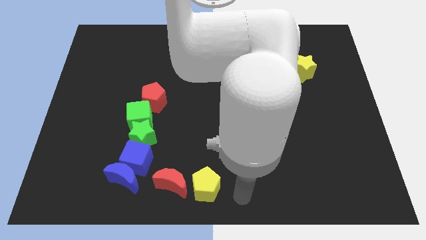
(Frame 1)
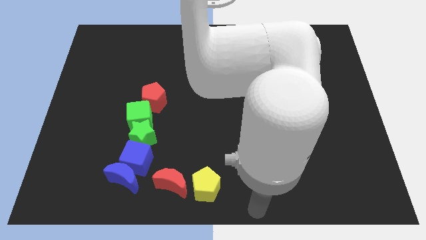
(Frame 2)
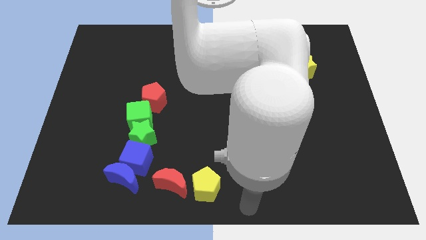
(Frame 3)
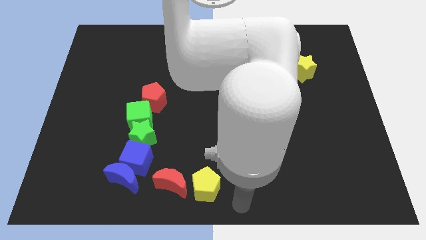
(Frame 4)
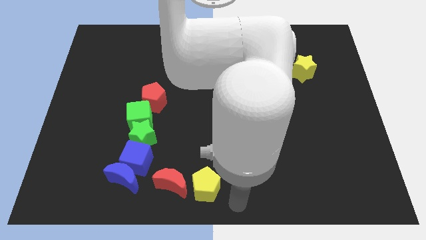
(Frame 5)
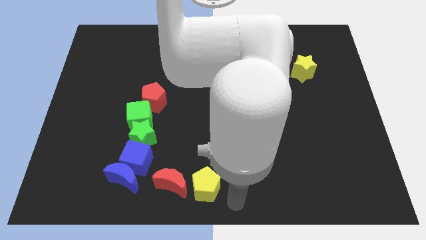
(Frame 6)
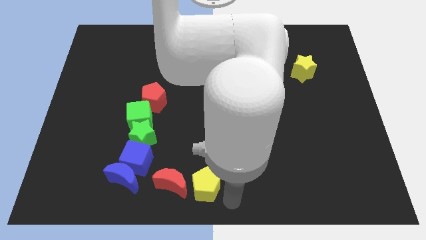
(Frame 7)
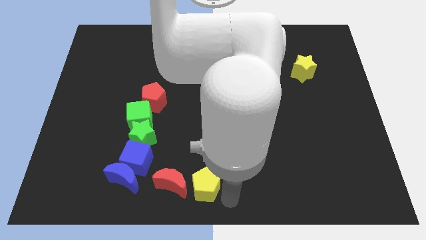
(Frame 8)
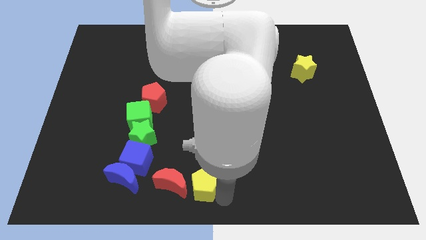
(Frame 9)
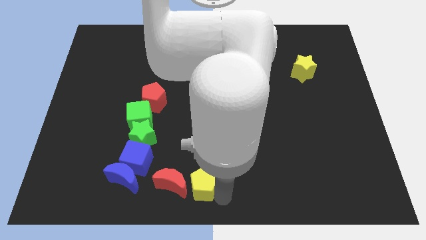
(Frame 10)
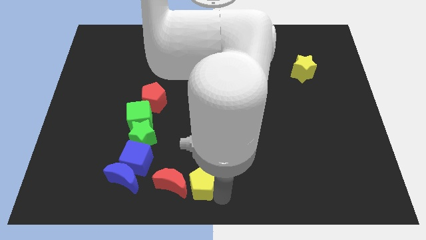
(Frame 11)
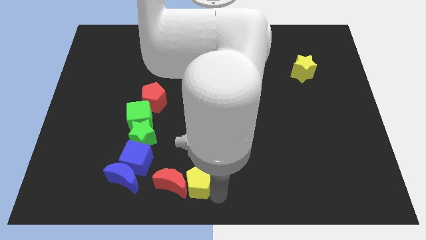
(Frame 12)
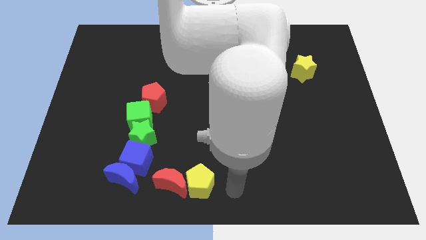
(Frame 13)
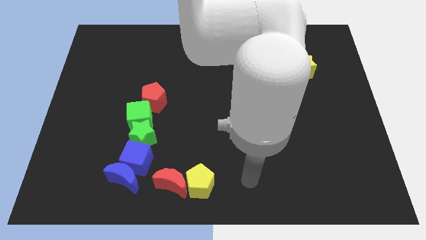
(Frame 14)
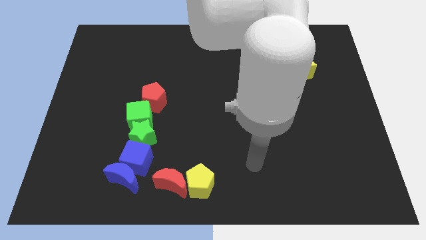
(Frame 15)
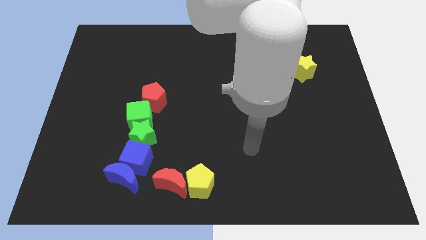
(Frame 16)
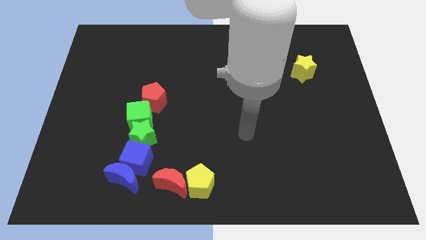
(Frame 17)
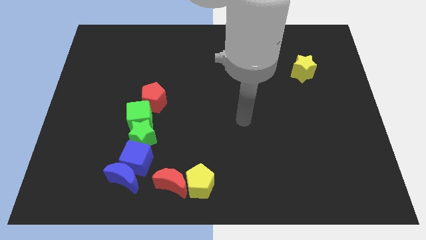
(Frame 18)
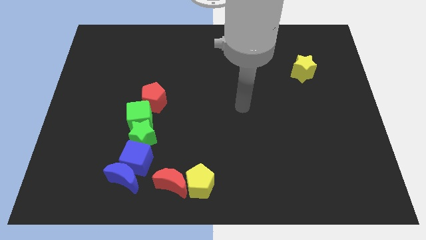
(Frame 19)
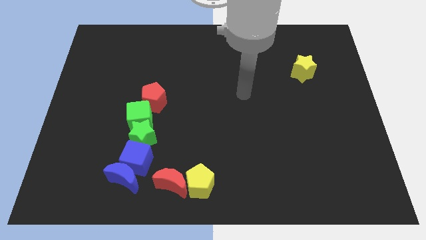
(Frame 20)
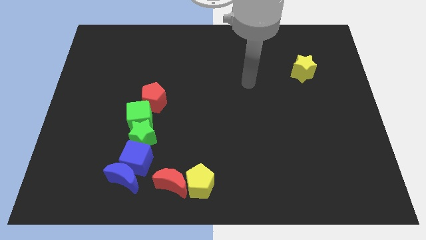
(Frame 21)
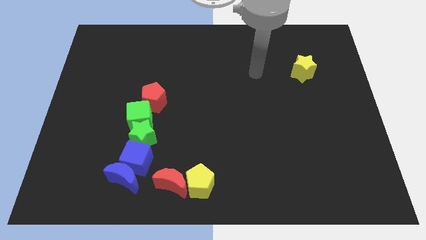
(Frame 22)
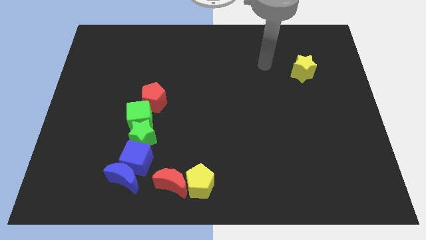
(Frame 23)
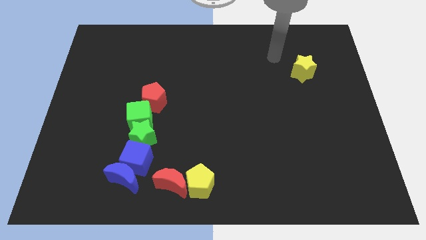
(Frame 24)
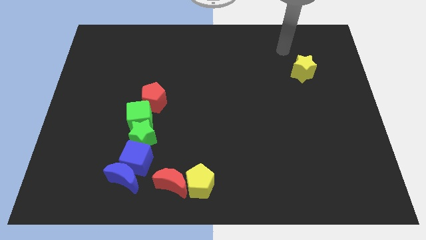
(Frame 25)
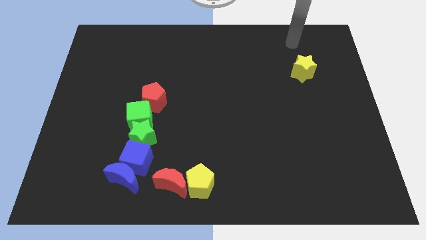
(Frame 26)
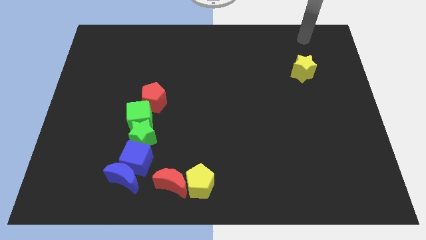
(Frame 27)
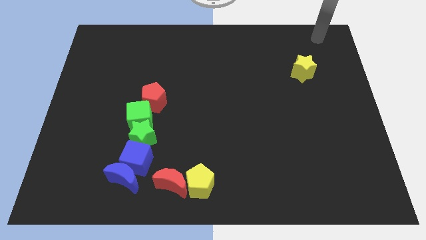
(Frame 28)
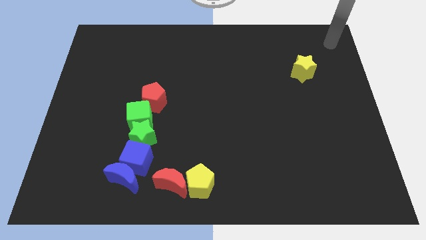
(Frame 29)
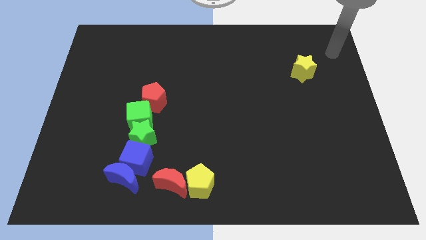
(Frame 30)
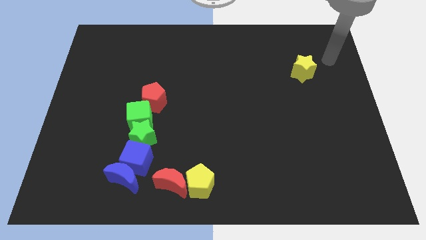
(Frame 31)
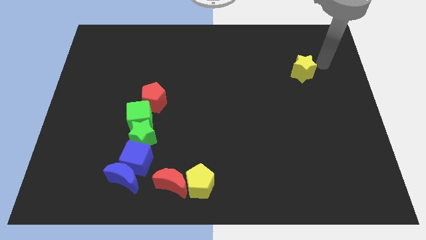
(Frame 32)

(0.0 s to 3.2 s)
move your arm towards the top right corner

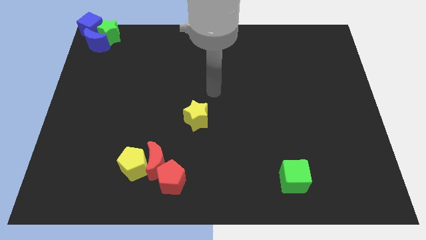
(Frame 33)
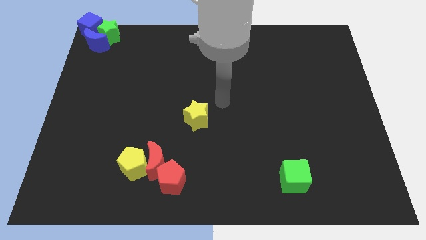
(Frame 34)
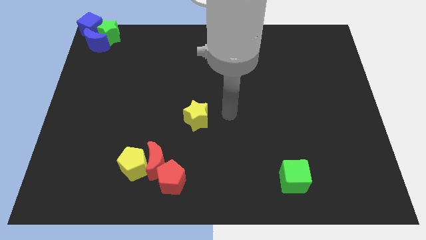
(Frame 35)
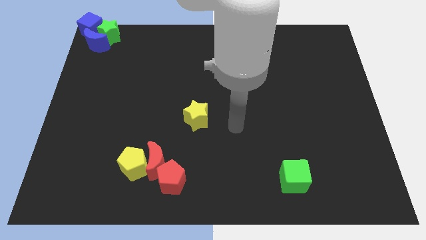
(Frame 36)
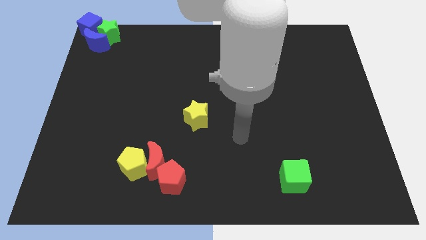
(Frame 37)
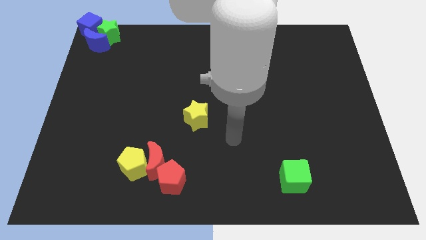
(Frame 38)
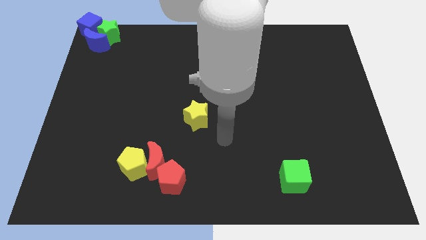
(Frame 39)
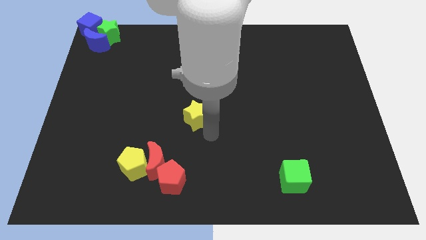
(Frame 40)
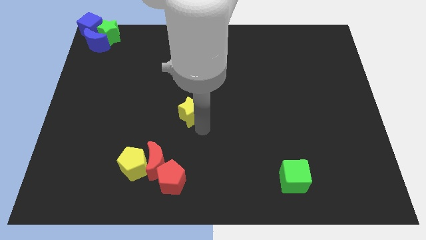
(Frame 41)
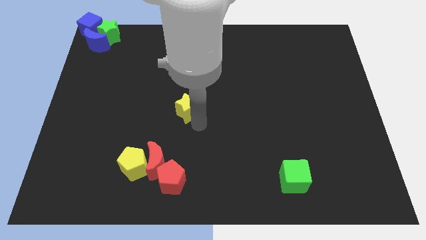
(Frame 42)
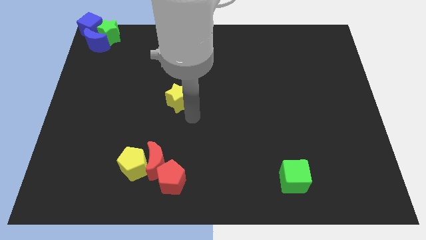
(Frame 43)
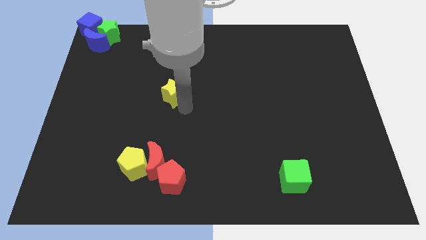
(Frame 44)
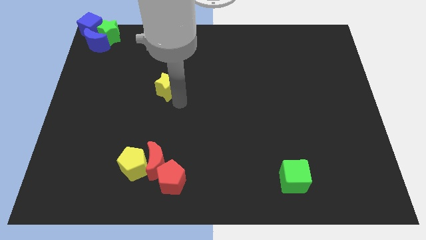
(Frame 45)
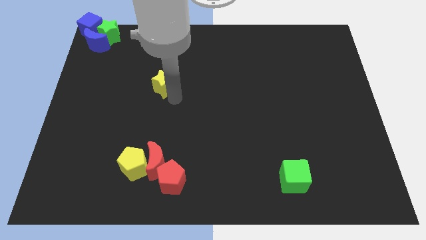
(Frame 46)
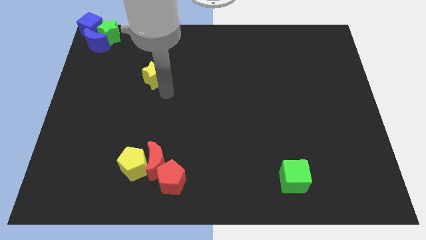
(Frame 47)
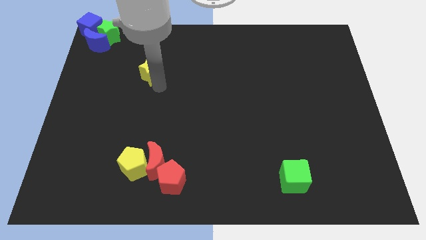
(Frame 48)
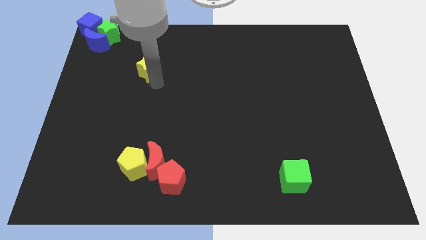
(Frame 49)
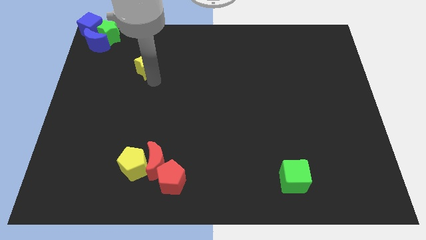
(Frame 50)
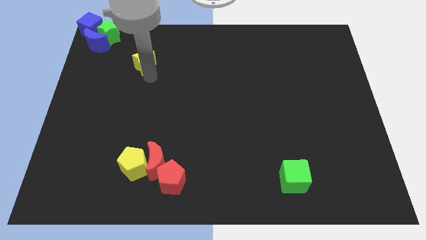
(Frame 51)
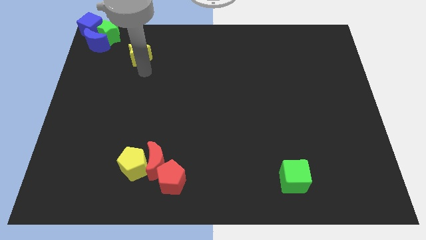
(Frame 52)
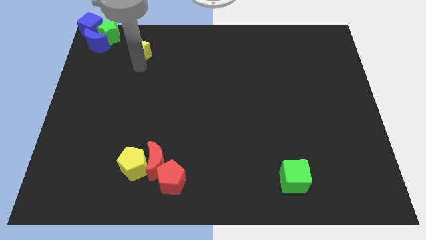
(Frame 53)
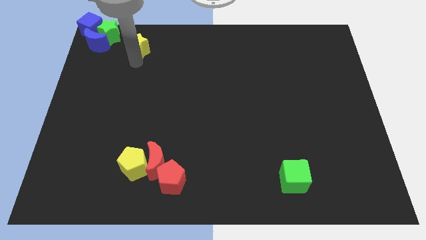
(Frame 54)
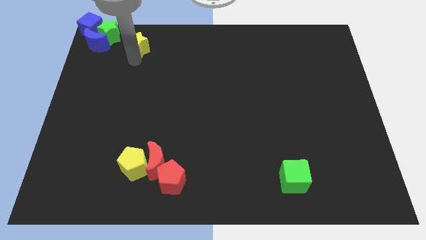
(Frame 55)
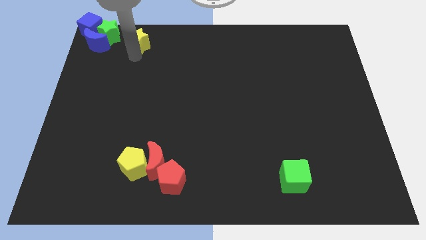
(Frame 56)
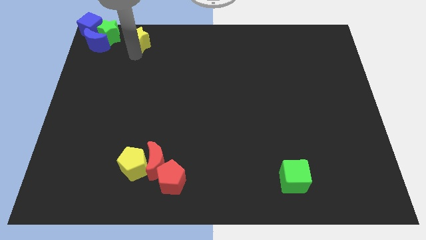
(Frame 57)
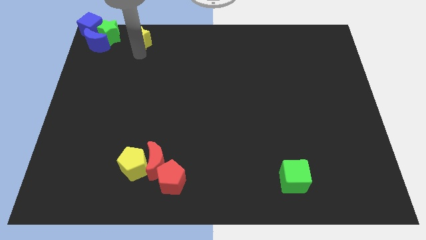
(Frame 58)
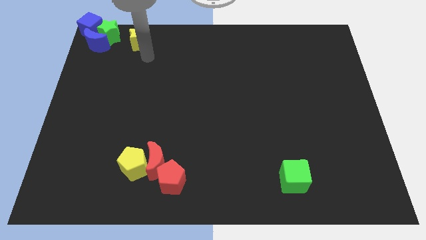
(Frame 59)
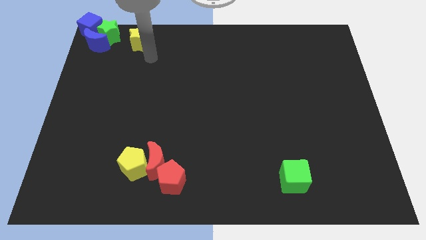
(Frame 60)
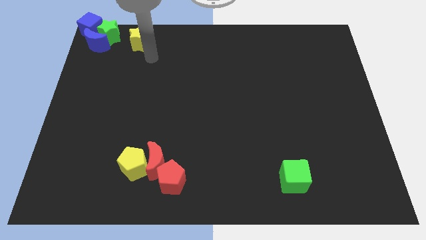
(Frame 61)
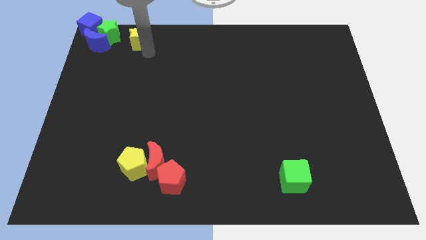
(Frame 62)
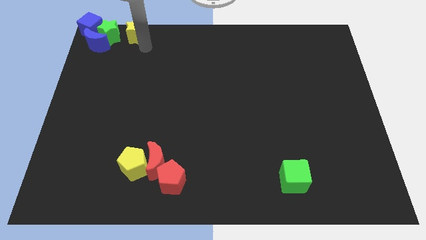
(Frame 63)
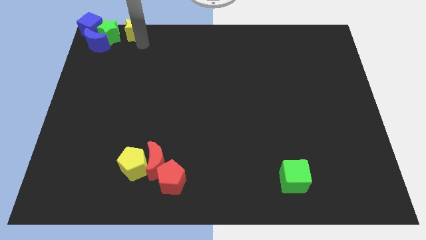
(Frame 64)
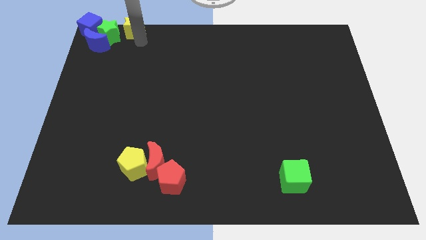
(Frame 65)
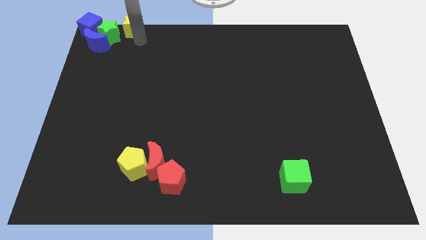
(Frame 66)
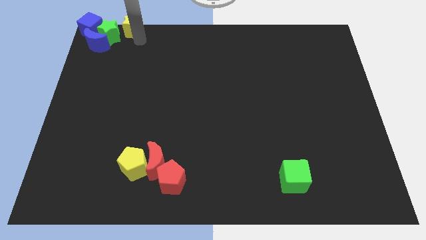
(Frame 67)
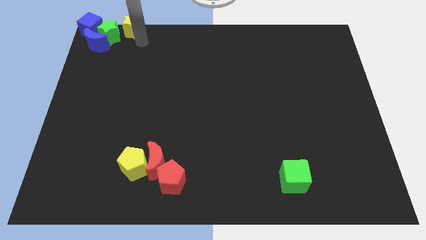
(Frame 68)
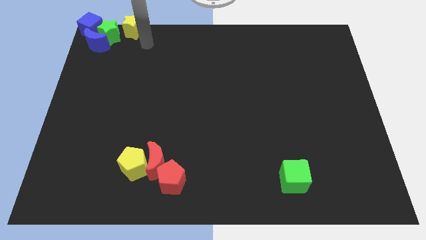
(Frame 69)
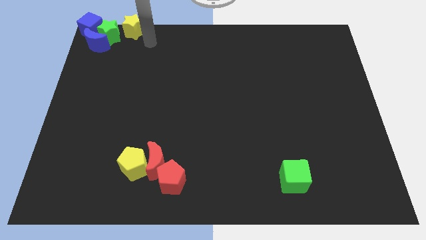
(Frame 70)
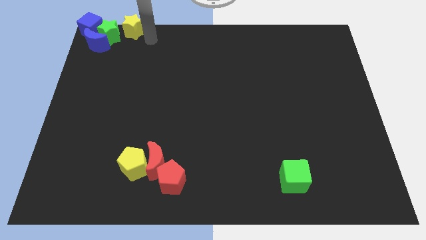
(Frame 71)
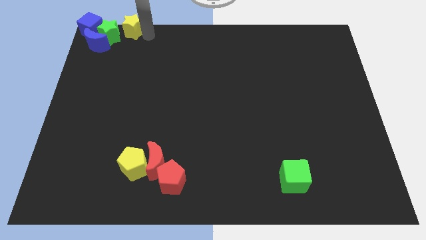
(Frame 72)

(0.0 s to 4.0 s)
move the yellow star diagonally top right to the green star

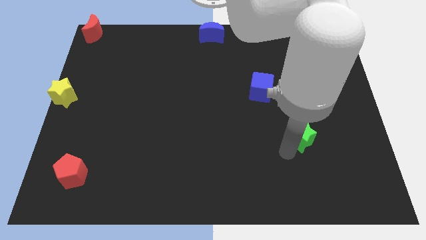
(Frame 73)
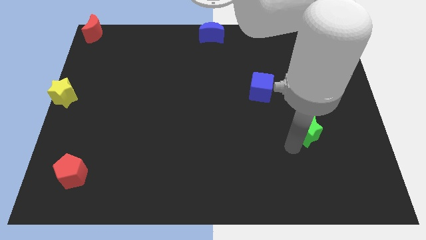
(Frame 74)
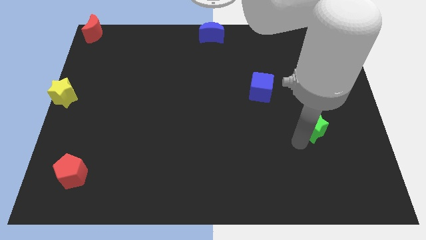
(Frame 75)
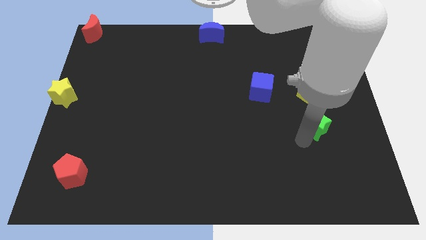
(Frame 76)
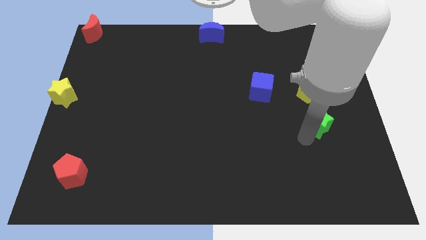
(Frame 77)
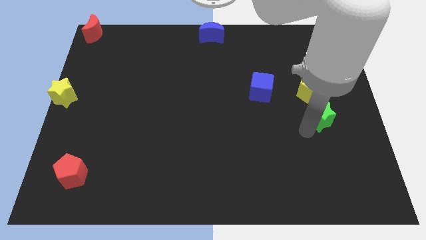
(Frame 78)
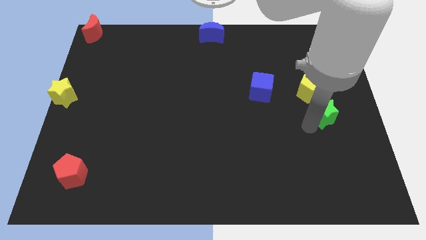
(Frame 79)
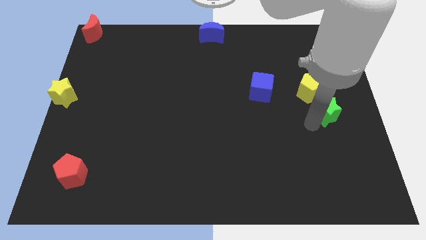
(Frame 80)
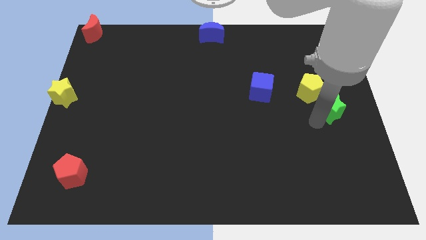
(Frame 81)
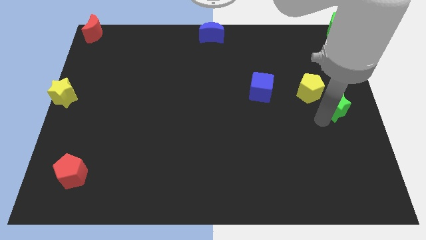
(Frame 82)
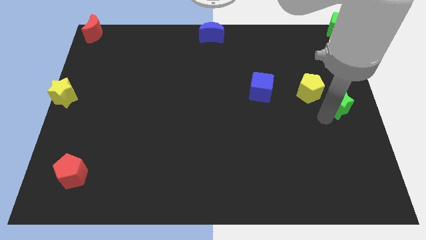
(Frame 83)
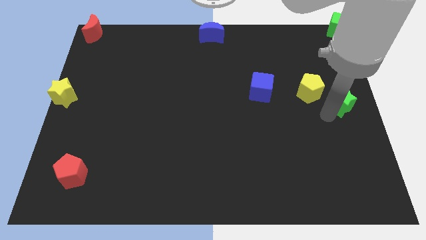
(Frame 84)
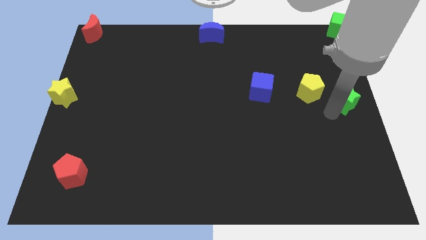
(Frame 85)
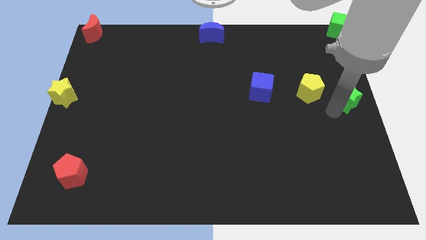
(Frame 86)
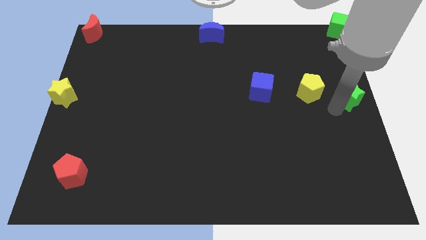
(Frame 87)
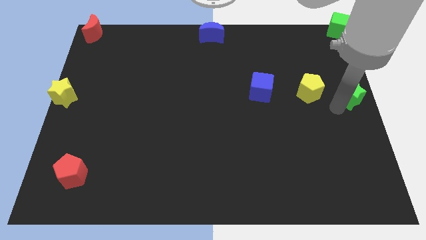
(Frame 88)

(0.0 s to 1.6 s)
place the green star to the right of the yellow pentagon

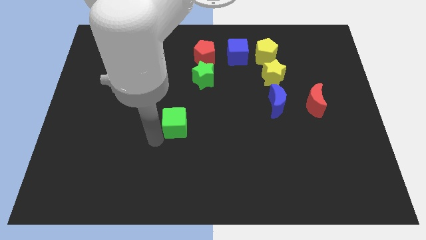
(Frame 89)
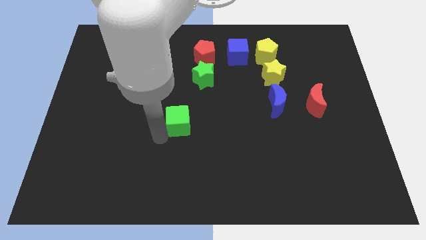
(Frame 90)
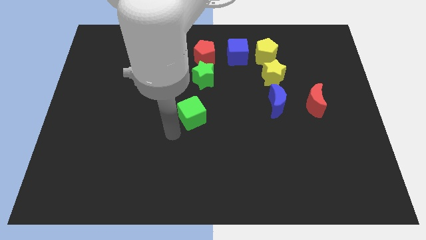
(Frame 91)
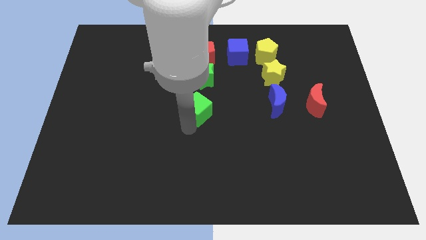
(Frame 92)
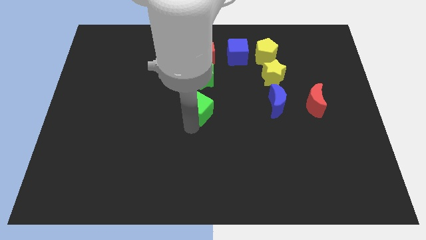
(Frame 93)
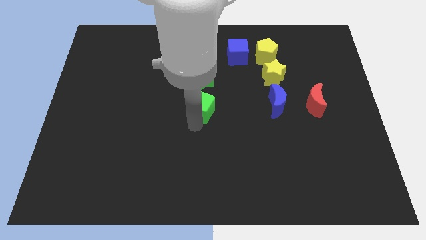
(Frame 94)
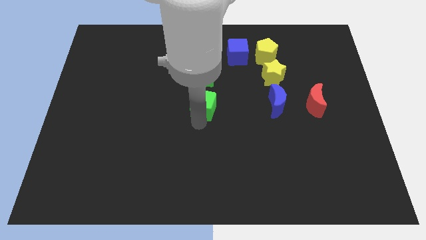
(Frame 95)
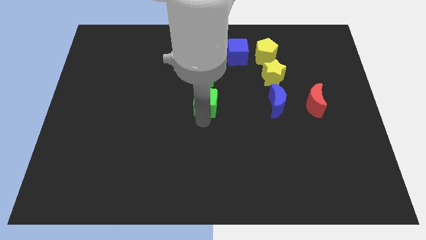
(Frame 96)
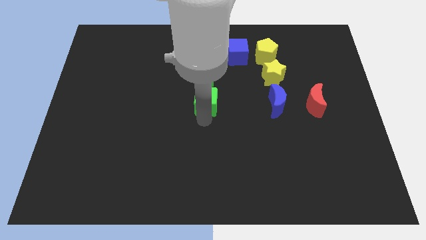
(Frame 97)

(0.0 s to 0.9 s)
place the green cube below the green star
